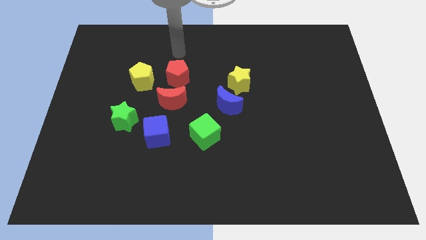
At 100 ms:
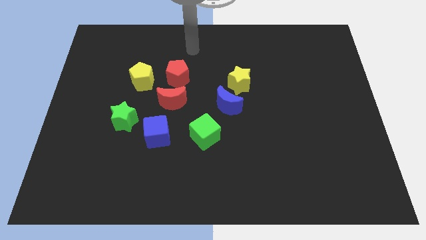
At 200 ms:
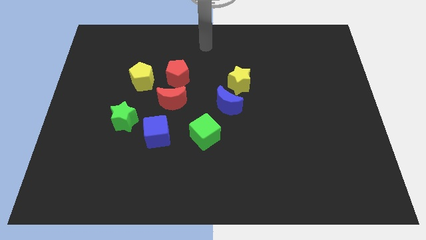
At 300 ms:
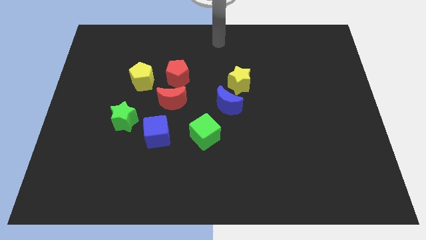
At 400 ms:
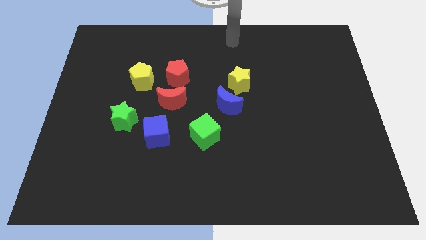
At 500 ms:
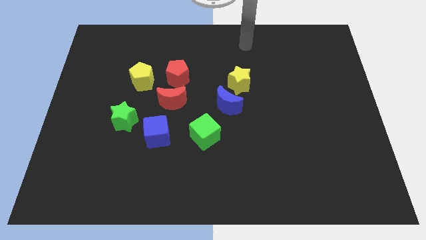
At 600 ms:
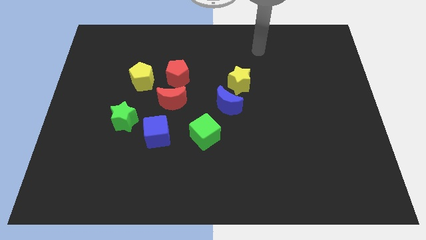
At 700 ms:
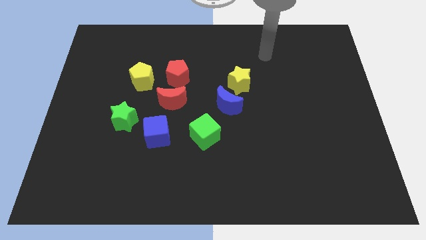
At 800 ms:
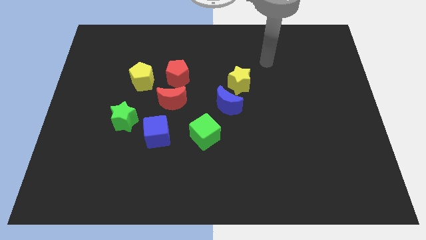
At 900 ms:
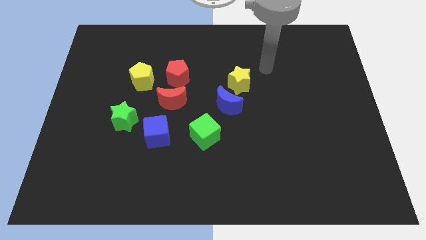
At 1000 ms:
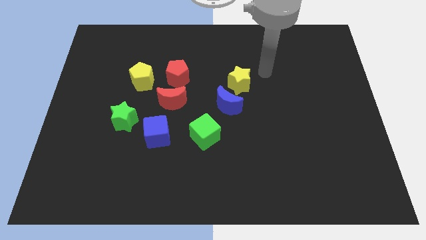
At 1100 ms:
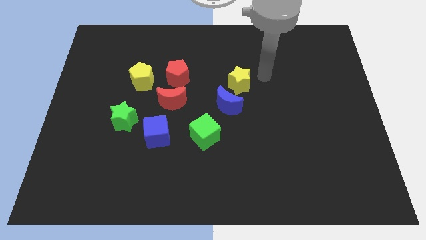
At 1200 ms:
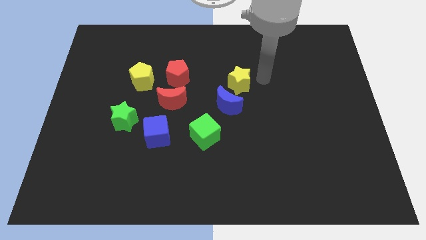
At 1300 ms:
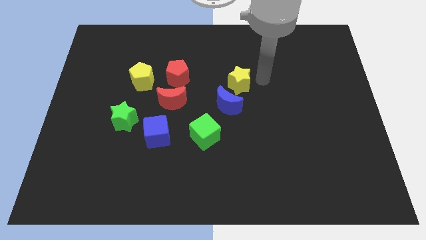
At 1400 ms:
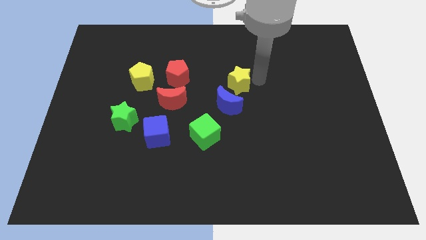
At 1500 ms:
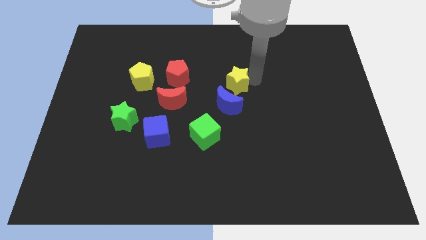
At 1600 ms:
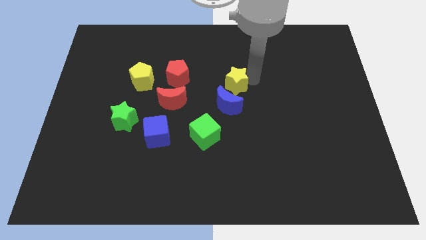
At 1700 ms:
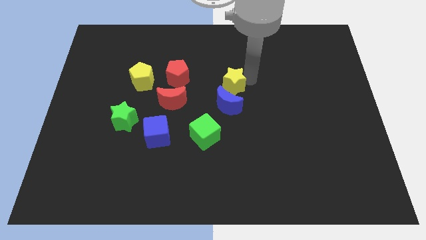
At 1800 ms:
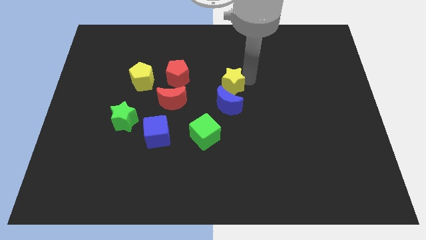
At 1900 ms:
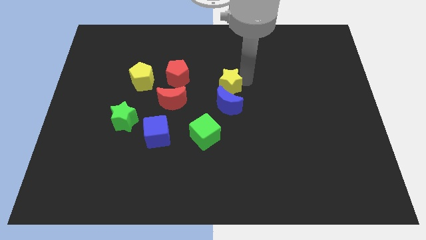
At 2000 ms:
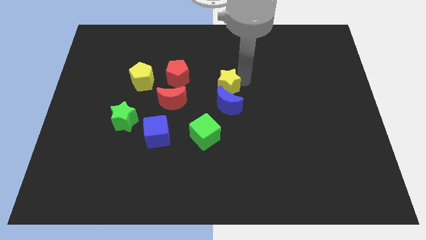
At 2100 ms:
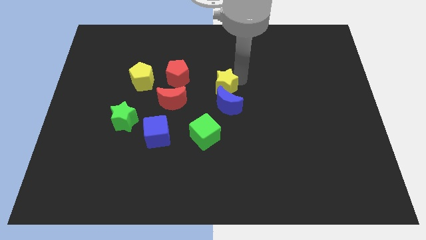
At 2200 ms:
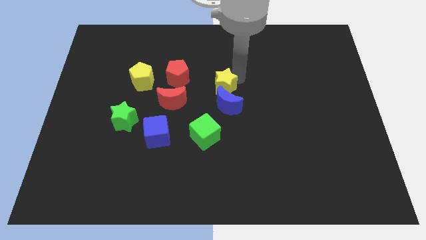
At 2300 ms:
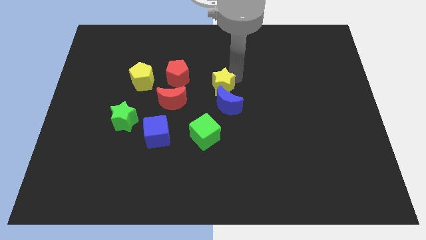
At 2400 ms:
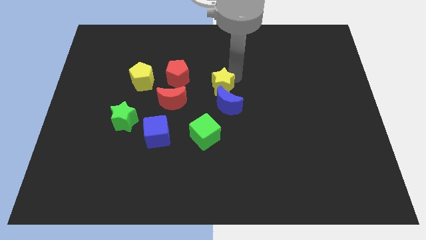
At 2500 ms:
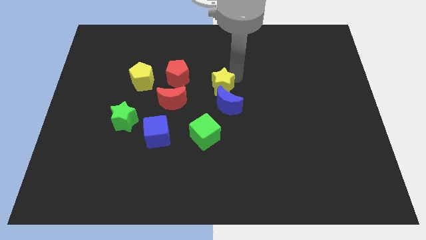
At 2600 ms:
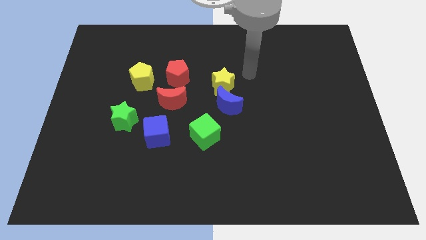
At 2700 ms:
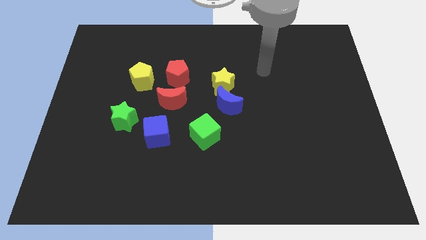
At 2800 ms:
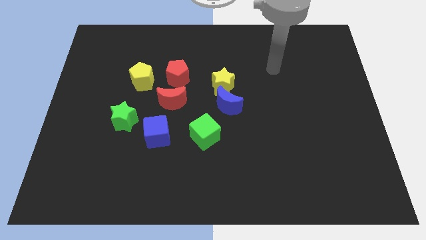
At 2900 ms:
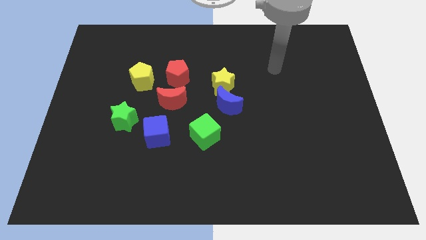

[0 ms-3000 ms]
slightly move the yellow star above the blue crescent

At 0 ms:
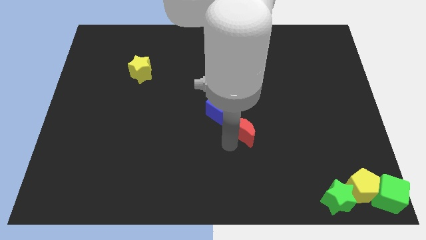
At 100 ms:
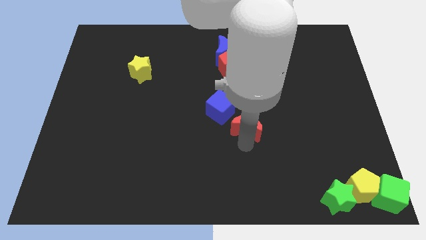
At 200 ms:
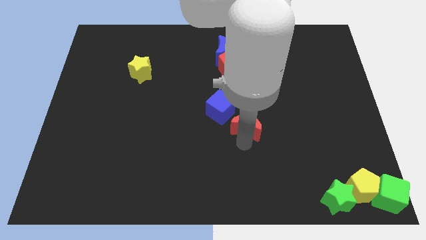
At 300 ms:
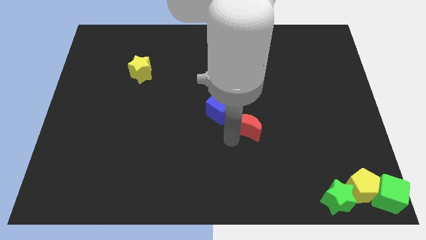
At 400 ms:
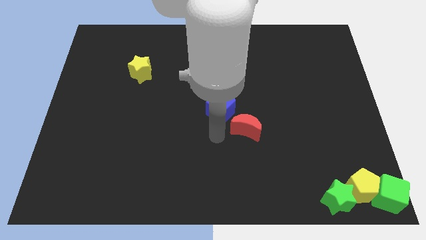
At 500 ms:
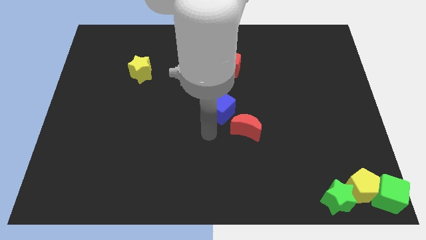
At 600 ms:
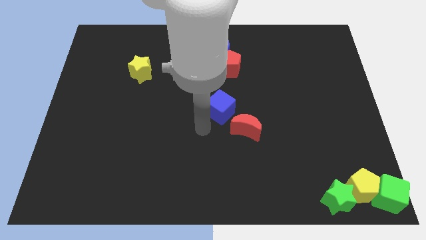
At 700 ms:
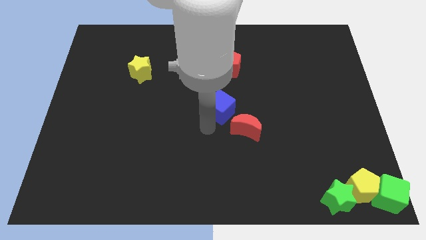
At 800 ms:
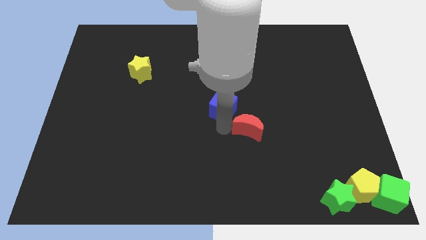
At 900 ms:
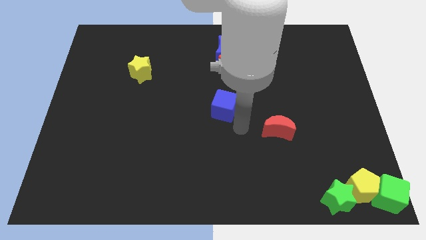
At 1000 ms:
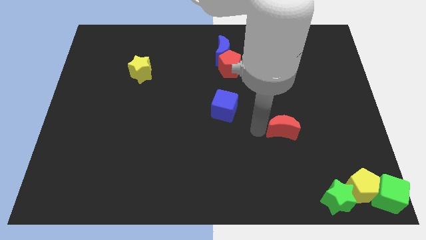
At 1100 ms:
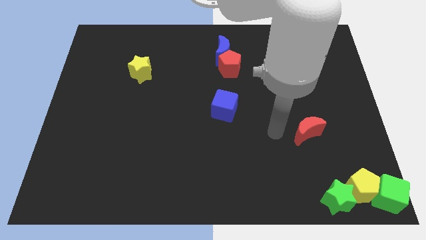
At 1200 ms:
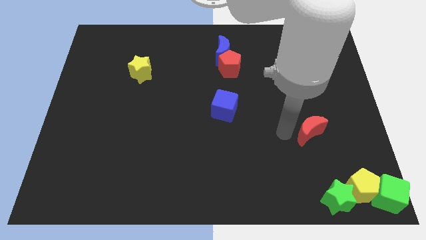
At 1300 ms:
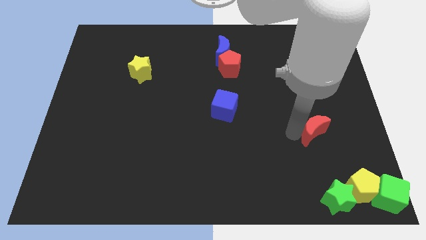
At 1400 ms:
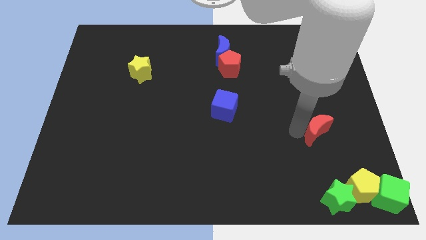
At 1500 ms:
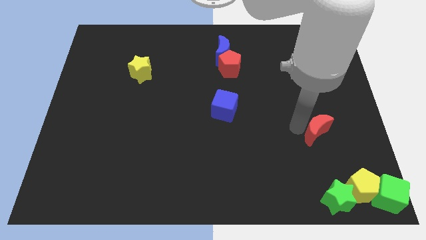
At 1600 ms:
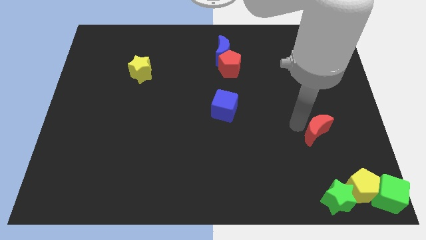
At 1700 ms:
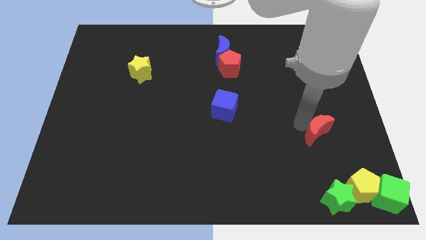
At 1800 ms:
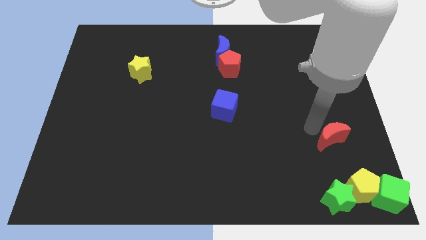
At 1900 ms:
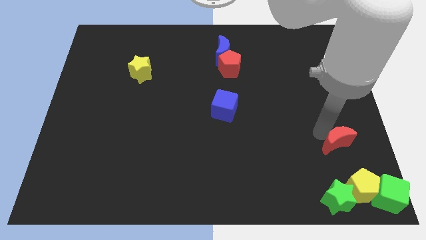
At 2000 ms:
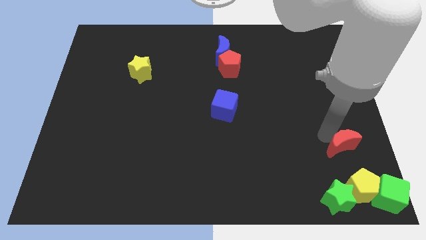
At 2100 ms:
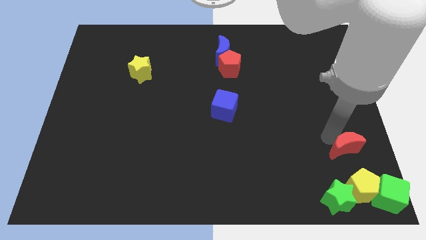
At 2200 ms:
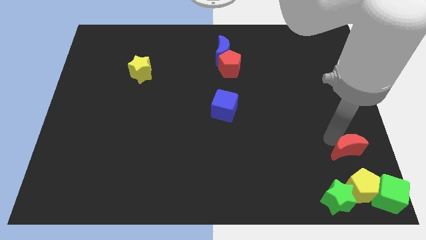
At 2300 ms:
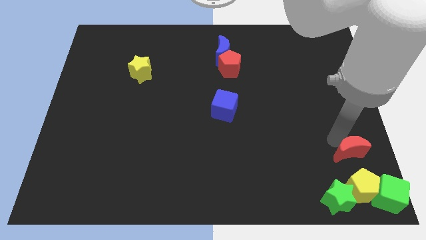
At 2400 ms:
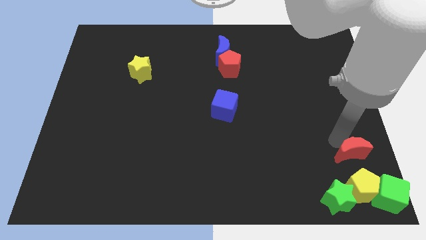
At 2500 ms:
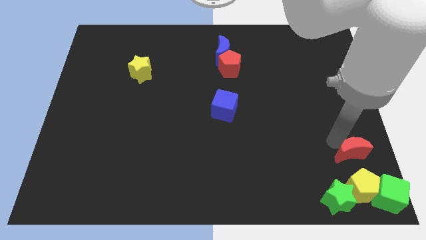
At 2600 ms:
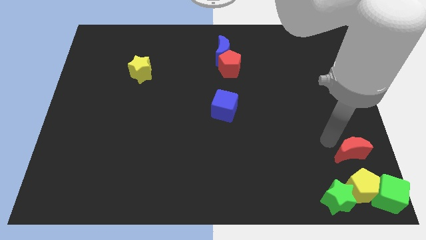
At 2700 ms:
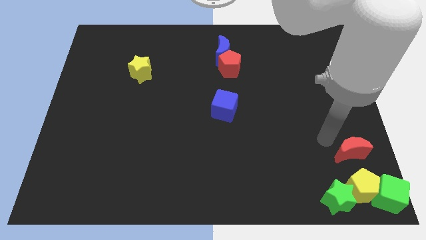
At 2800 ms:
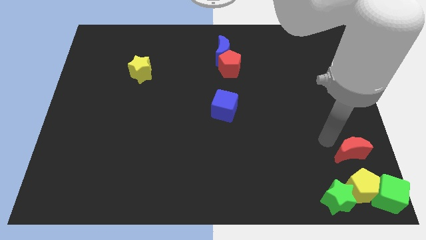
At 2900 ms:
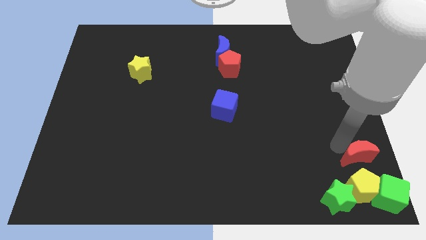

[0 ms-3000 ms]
push red crescent above yellow pentagon

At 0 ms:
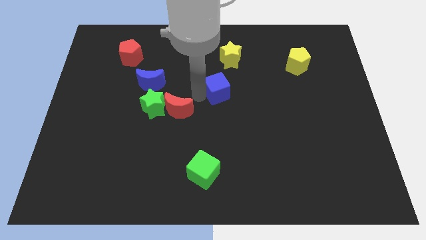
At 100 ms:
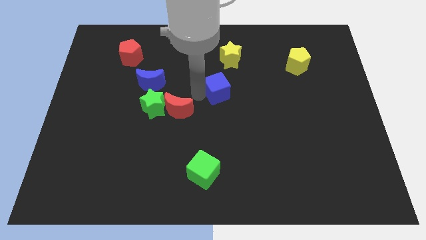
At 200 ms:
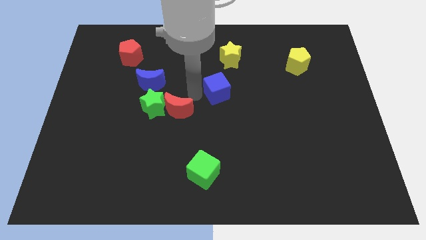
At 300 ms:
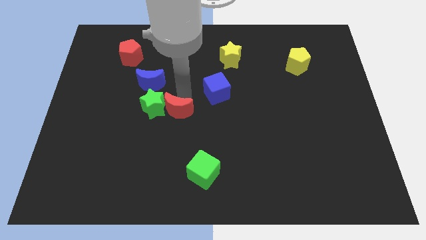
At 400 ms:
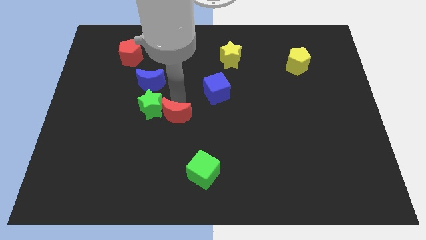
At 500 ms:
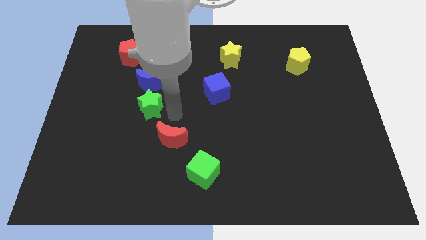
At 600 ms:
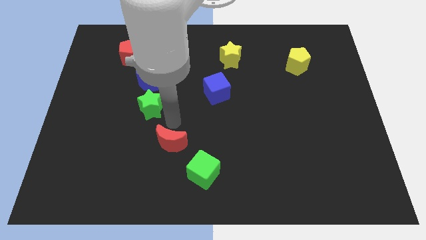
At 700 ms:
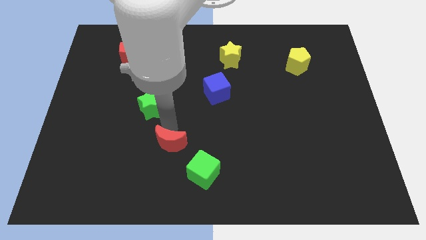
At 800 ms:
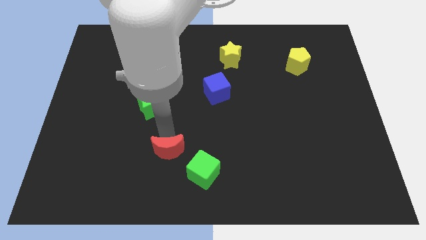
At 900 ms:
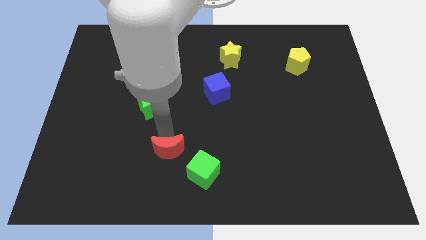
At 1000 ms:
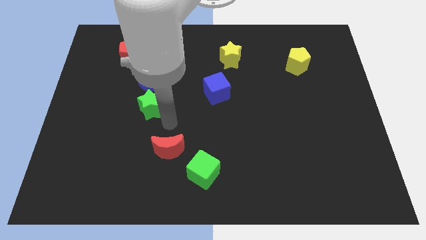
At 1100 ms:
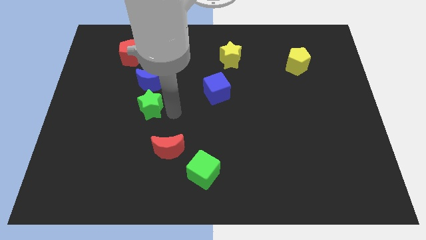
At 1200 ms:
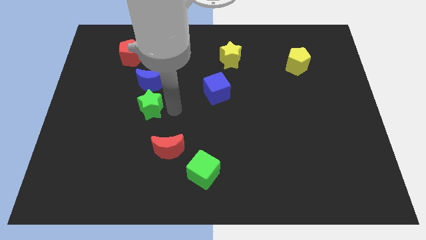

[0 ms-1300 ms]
place the red crescent diagonally to the green cube

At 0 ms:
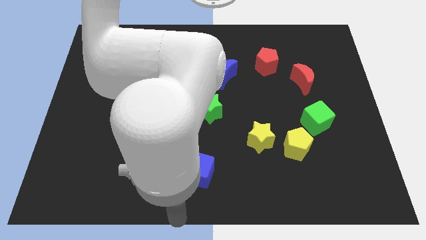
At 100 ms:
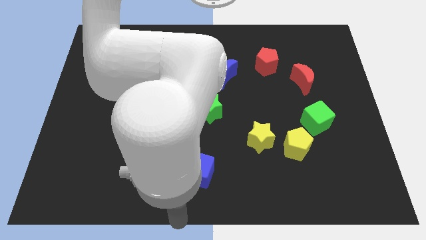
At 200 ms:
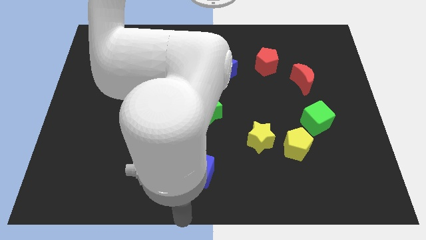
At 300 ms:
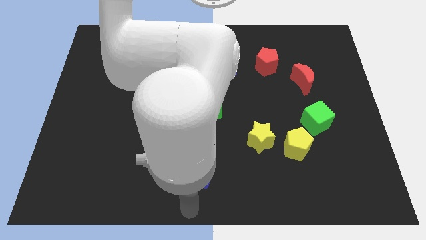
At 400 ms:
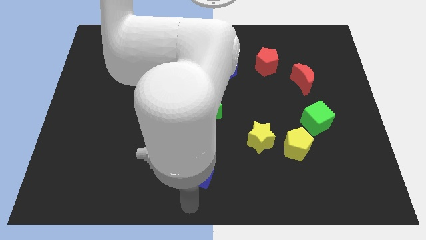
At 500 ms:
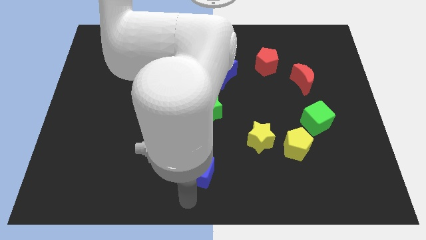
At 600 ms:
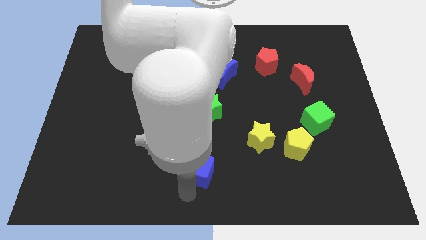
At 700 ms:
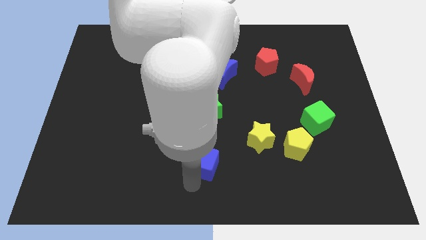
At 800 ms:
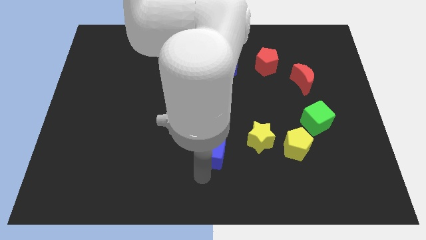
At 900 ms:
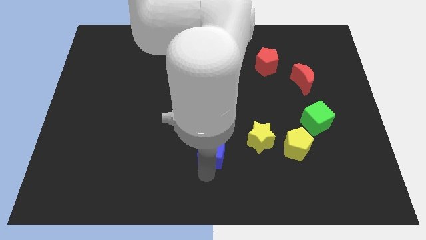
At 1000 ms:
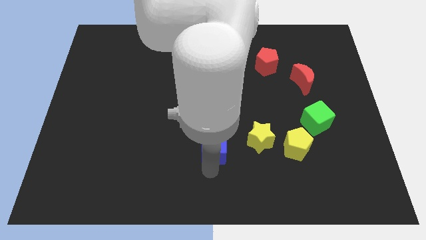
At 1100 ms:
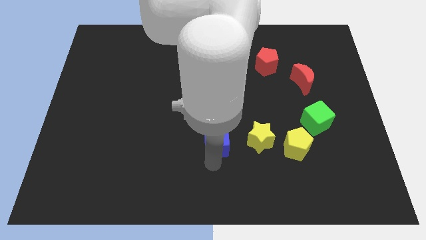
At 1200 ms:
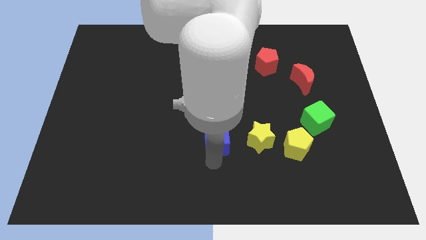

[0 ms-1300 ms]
move the blue cube towards the green star

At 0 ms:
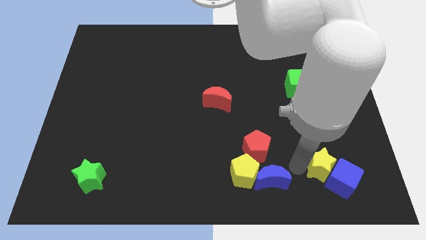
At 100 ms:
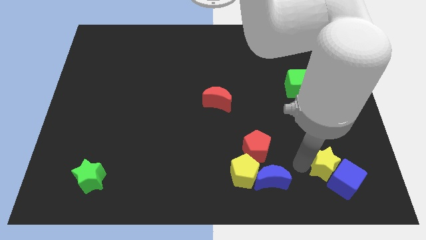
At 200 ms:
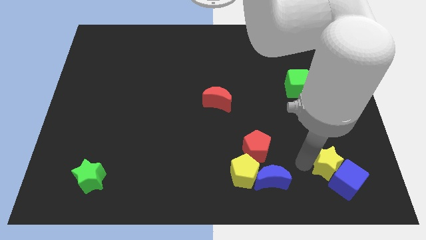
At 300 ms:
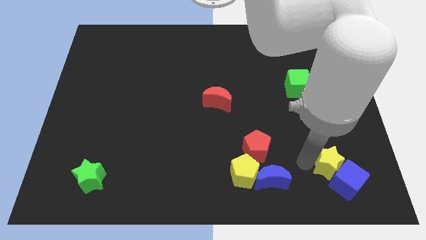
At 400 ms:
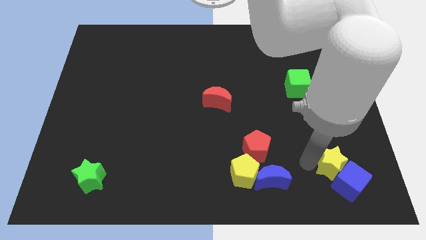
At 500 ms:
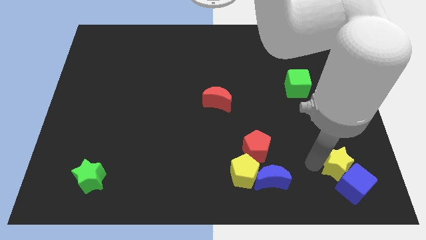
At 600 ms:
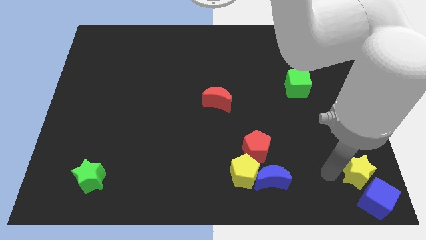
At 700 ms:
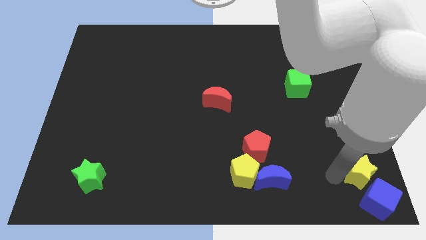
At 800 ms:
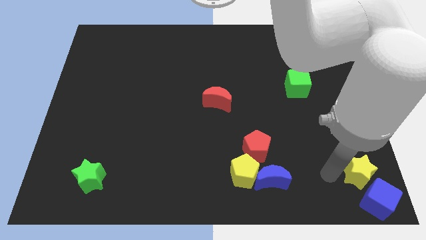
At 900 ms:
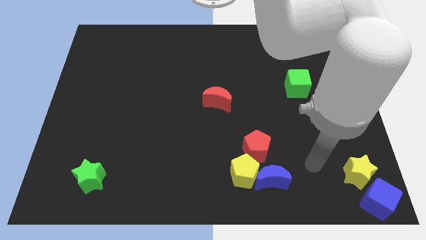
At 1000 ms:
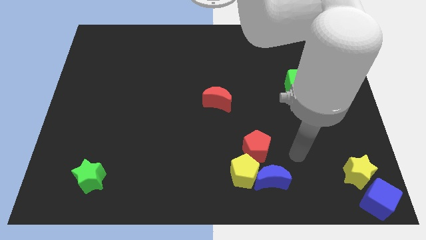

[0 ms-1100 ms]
push the yellow star and blue cube to the bottom right corner
